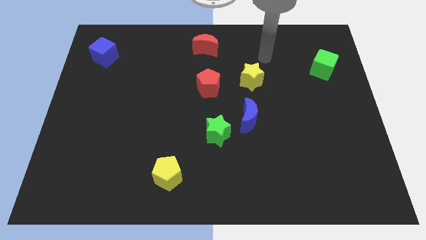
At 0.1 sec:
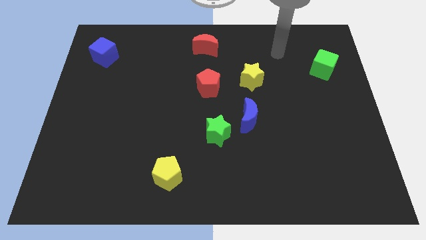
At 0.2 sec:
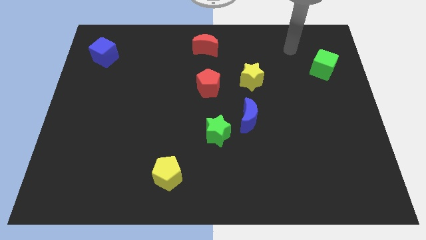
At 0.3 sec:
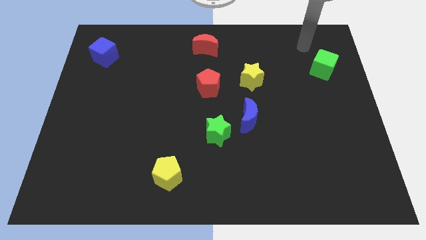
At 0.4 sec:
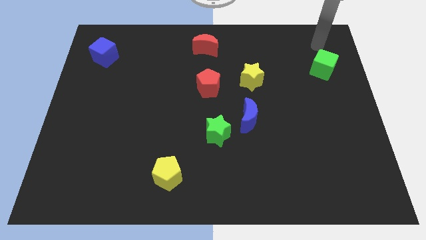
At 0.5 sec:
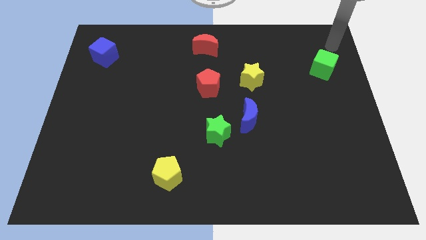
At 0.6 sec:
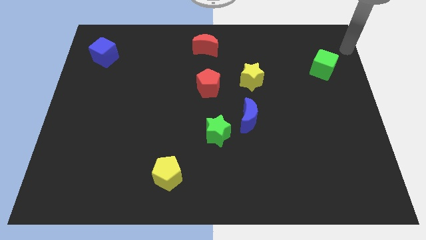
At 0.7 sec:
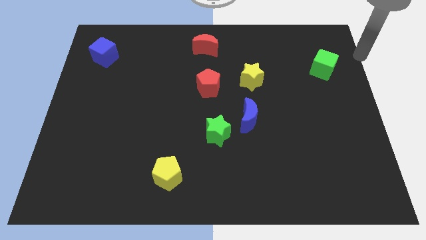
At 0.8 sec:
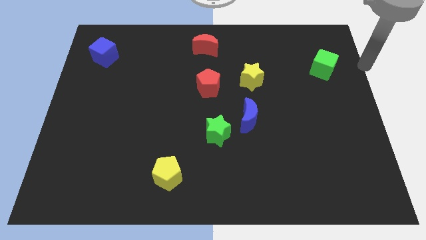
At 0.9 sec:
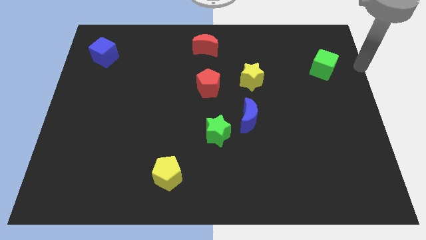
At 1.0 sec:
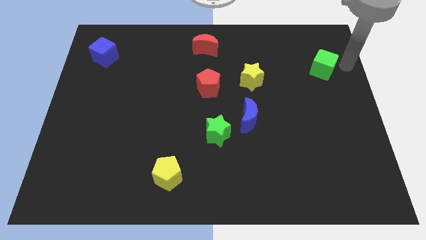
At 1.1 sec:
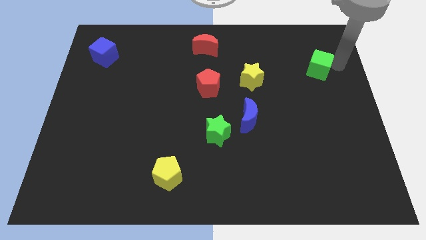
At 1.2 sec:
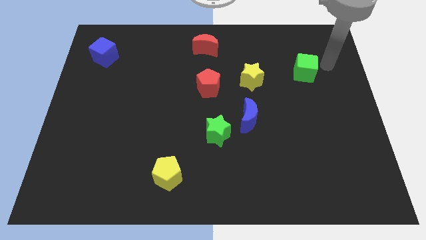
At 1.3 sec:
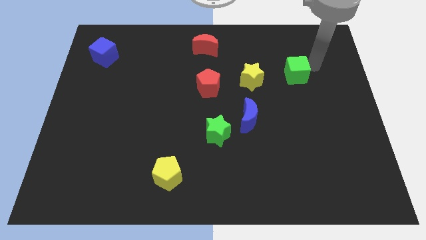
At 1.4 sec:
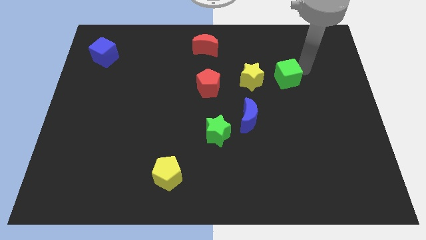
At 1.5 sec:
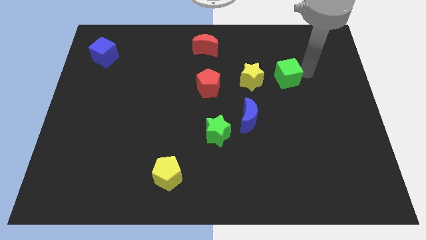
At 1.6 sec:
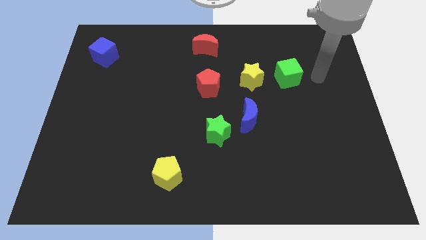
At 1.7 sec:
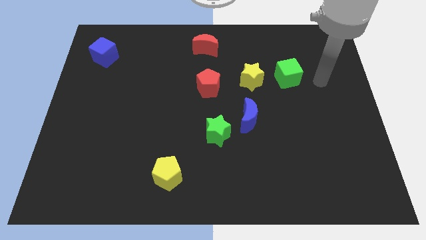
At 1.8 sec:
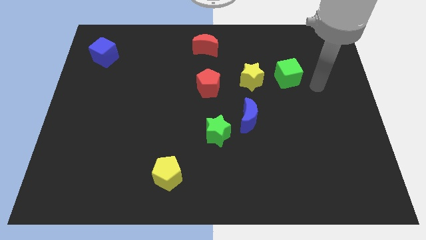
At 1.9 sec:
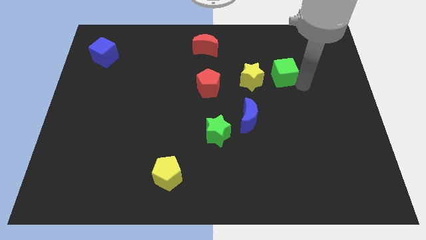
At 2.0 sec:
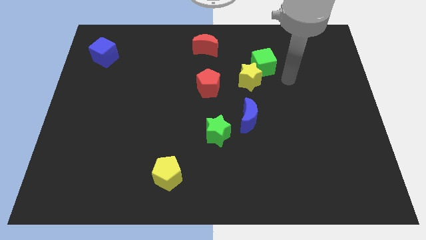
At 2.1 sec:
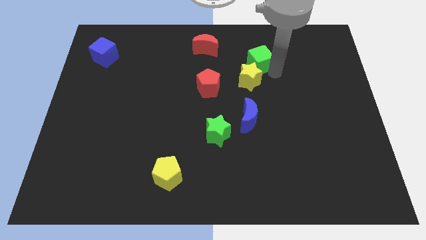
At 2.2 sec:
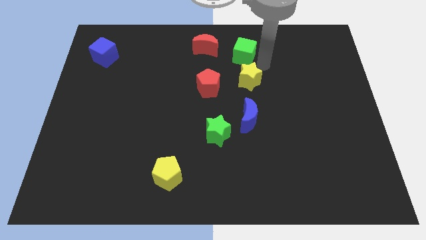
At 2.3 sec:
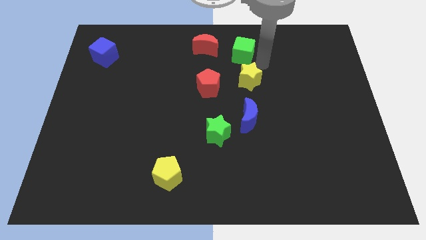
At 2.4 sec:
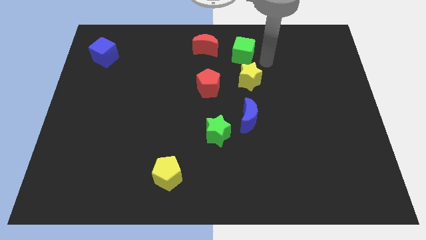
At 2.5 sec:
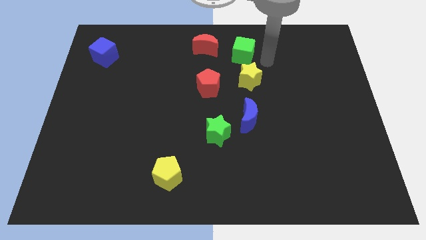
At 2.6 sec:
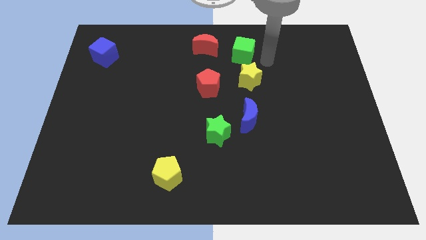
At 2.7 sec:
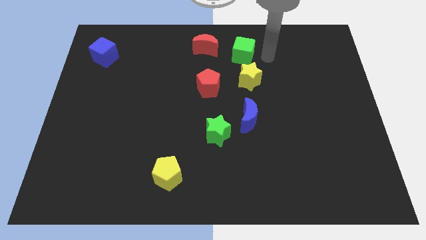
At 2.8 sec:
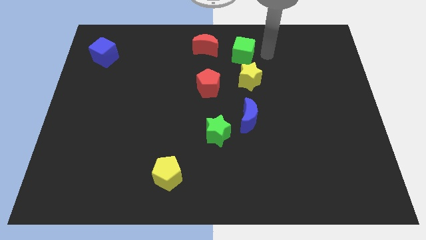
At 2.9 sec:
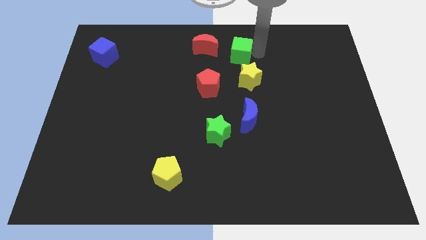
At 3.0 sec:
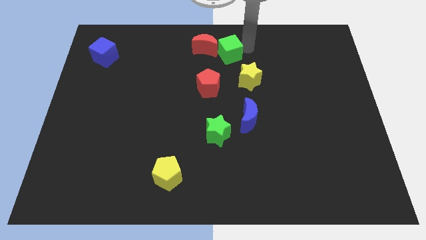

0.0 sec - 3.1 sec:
slide the green cube diagonally top left to the yellow star

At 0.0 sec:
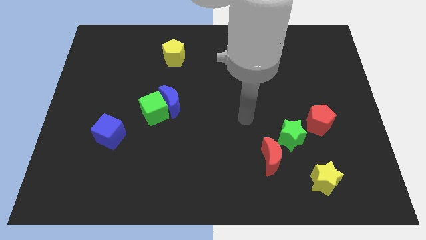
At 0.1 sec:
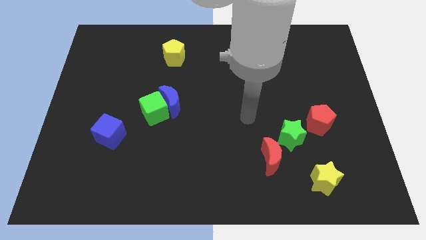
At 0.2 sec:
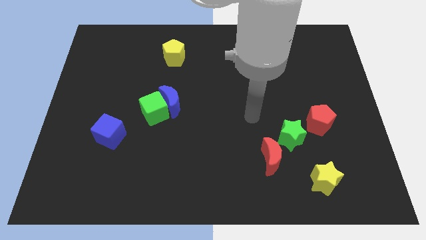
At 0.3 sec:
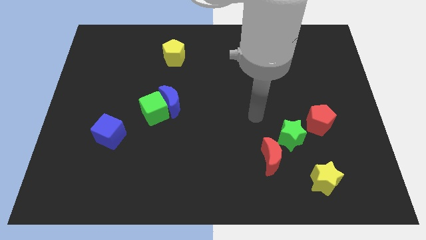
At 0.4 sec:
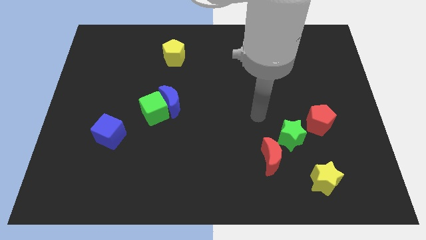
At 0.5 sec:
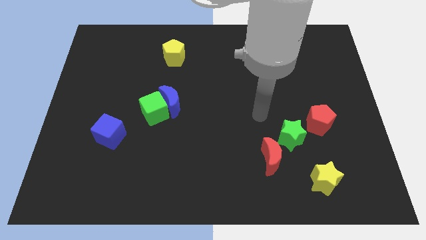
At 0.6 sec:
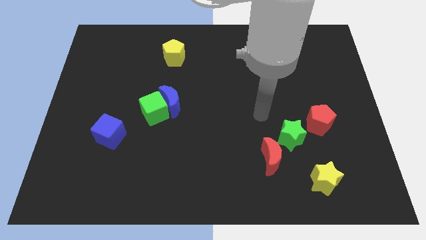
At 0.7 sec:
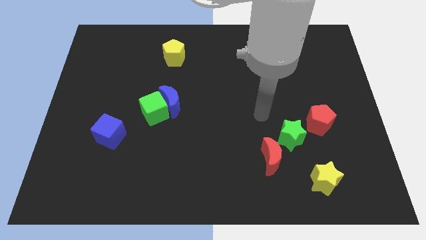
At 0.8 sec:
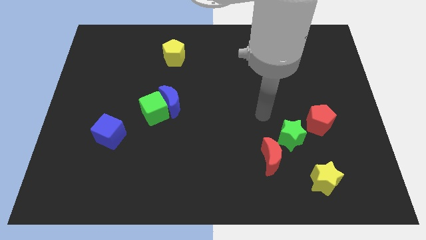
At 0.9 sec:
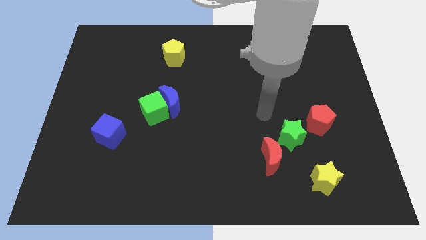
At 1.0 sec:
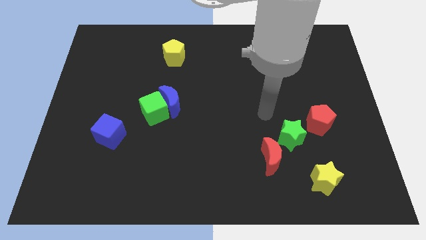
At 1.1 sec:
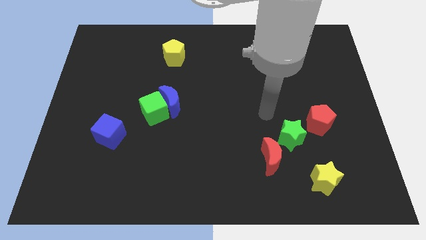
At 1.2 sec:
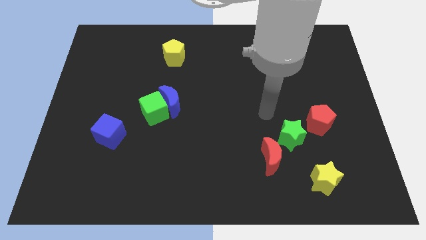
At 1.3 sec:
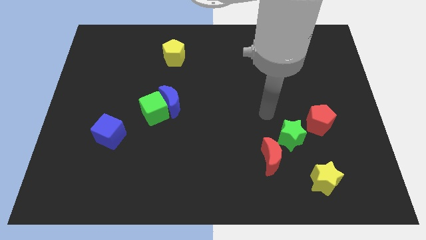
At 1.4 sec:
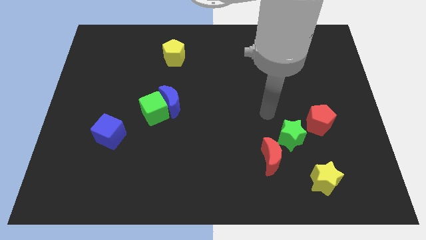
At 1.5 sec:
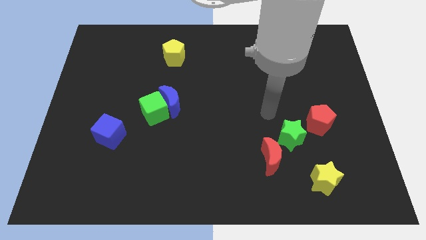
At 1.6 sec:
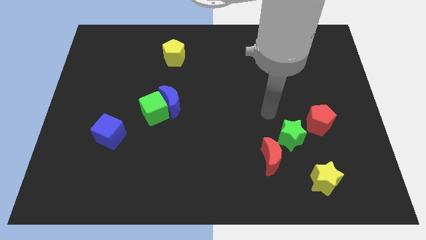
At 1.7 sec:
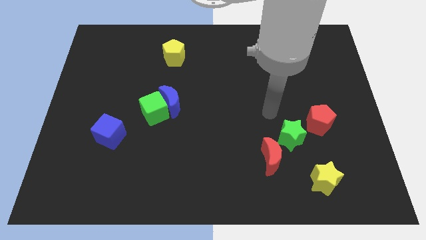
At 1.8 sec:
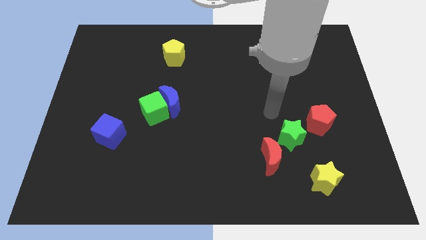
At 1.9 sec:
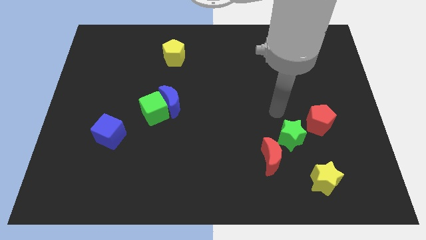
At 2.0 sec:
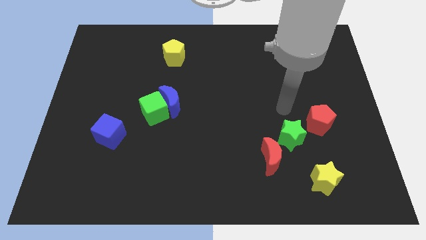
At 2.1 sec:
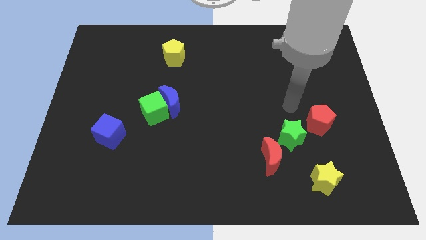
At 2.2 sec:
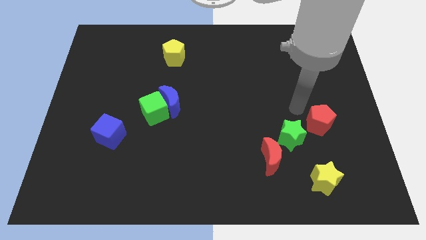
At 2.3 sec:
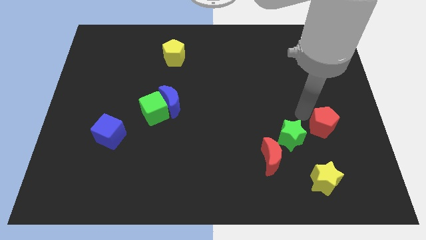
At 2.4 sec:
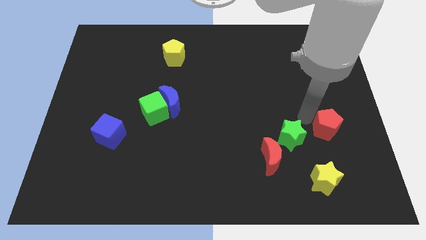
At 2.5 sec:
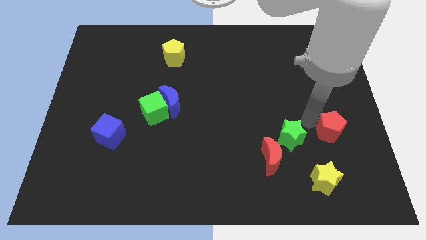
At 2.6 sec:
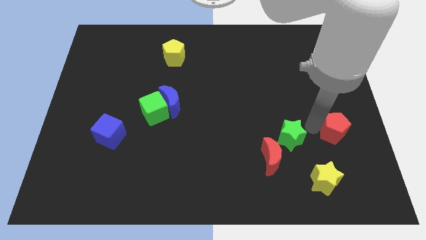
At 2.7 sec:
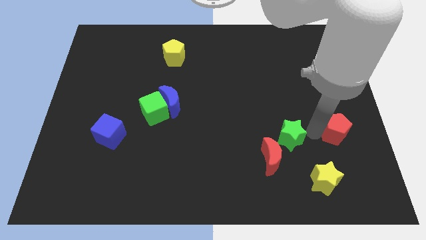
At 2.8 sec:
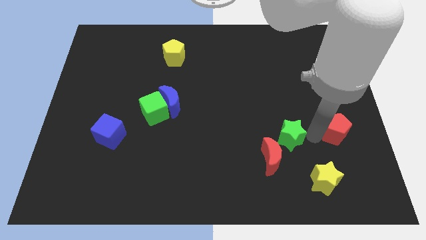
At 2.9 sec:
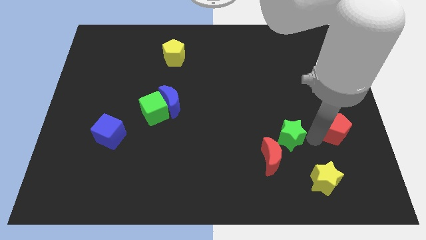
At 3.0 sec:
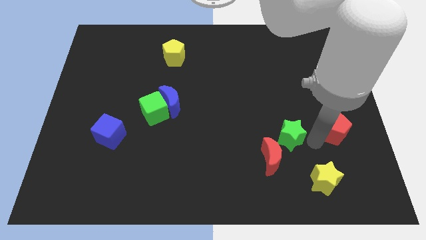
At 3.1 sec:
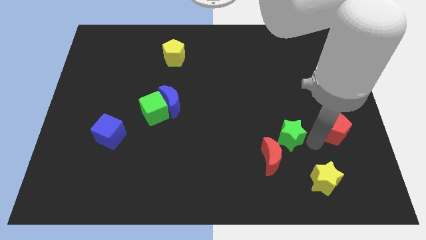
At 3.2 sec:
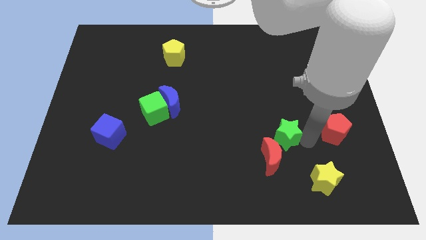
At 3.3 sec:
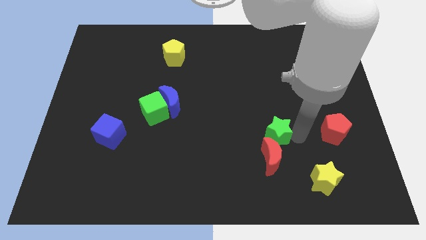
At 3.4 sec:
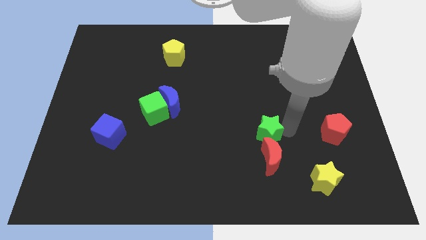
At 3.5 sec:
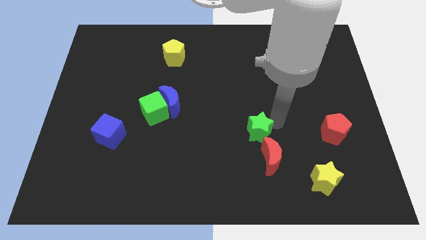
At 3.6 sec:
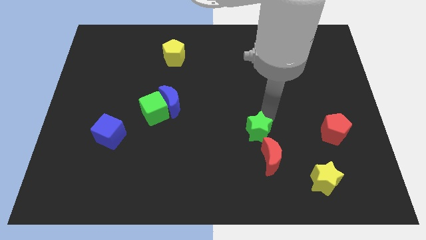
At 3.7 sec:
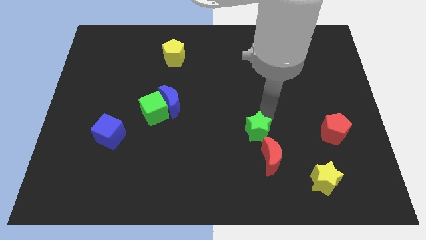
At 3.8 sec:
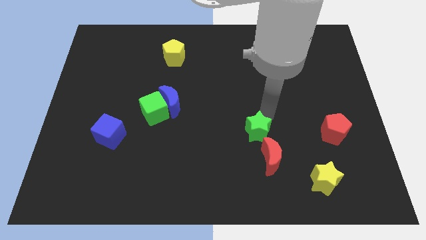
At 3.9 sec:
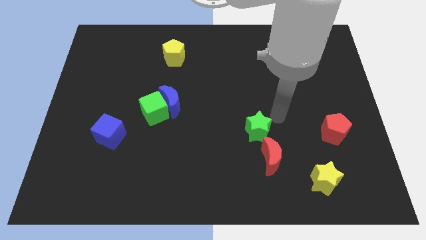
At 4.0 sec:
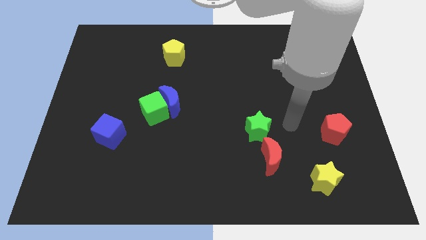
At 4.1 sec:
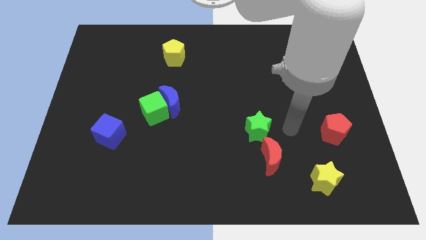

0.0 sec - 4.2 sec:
place the green star above the red crescent

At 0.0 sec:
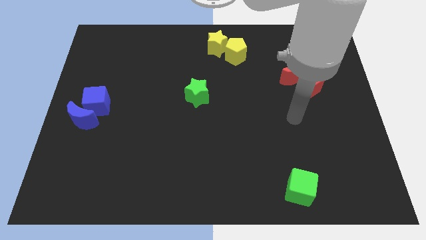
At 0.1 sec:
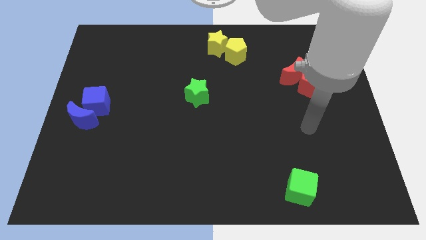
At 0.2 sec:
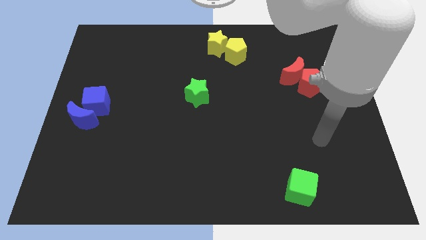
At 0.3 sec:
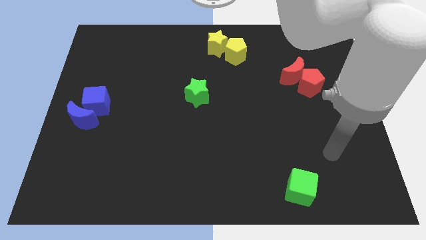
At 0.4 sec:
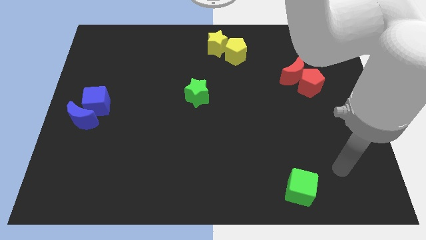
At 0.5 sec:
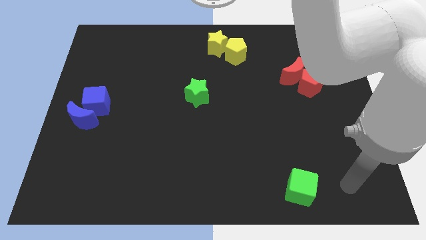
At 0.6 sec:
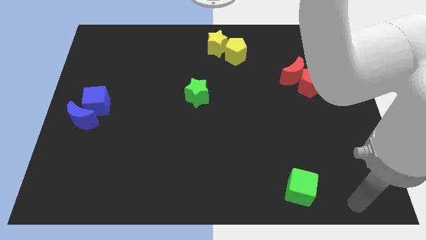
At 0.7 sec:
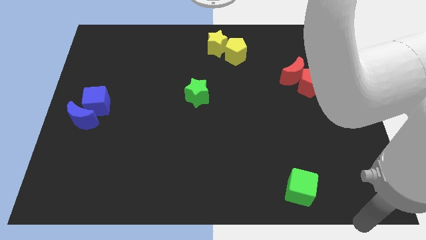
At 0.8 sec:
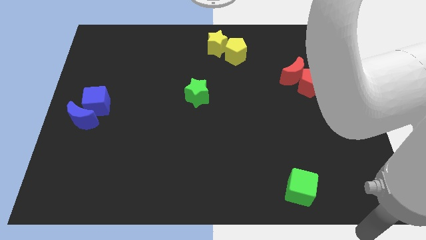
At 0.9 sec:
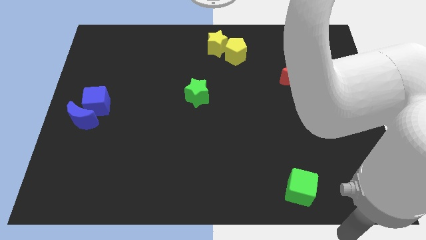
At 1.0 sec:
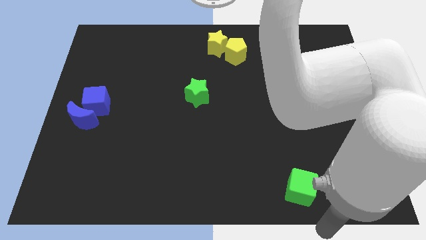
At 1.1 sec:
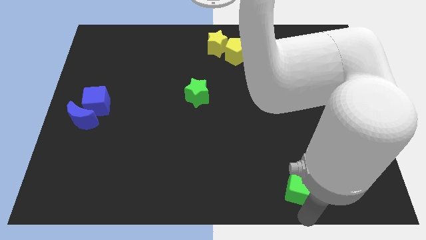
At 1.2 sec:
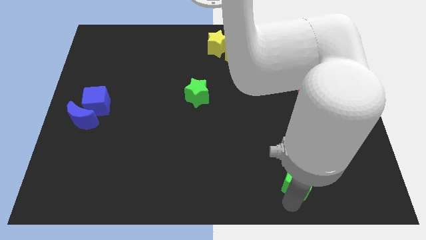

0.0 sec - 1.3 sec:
move the arm under the green cube

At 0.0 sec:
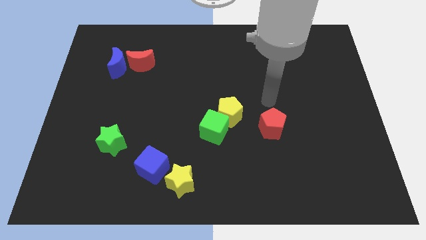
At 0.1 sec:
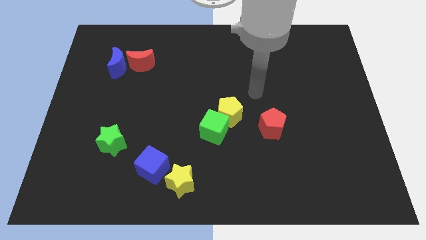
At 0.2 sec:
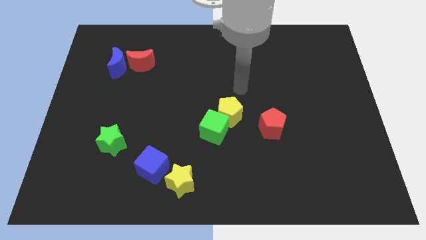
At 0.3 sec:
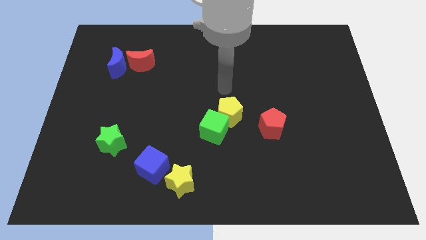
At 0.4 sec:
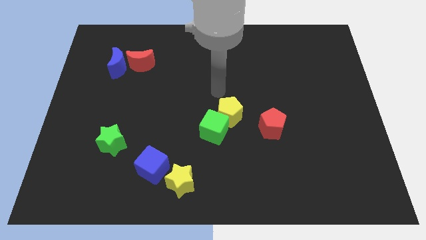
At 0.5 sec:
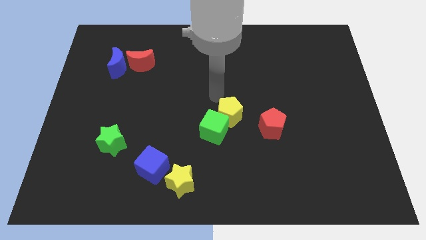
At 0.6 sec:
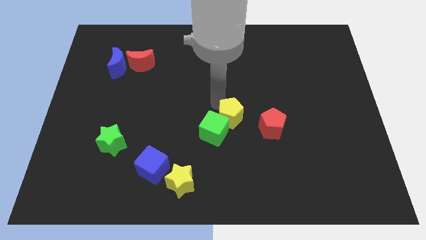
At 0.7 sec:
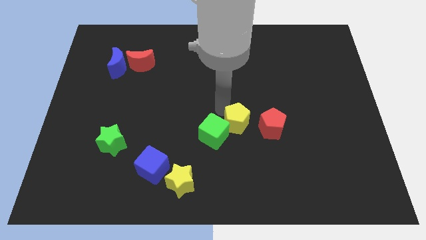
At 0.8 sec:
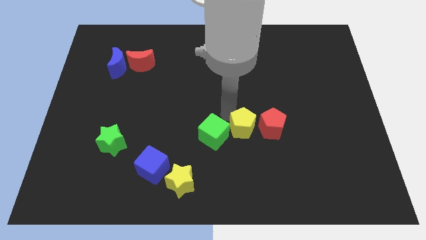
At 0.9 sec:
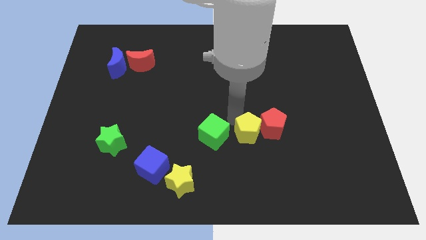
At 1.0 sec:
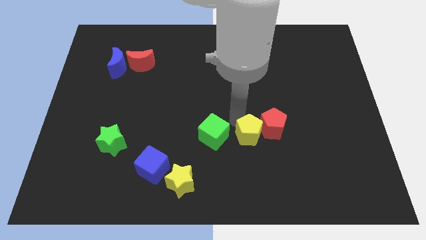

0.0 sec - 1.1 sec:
slide the yellow pentagon into the left side of the red pentagon
